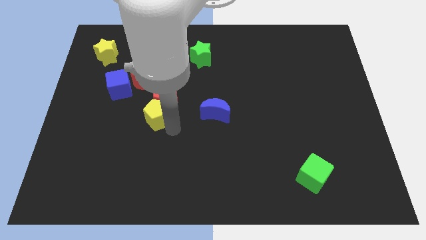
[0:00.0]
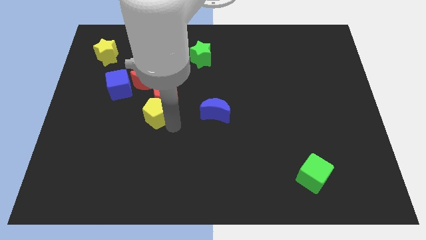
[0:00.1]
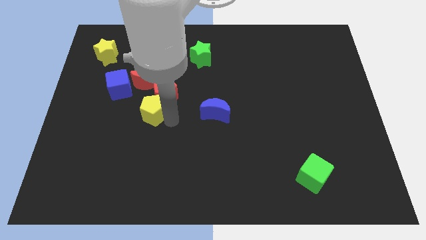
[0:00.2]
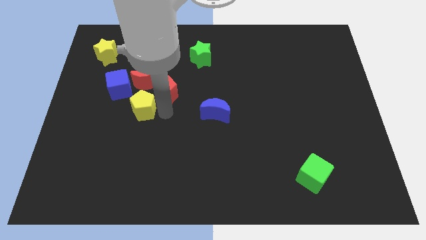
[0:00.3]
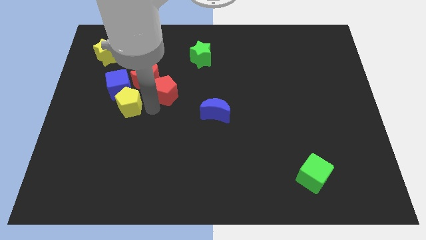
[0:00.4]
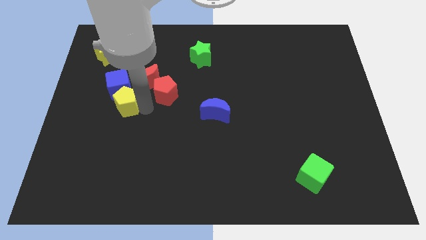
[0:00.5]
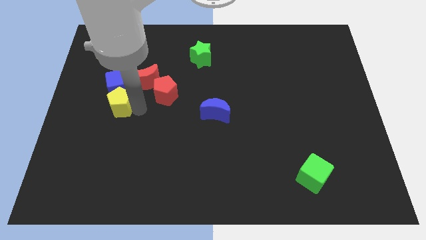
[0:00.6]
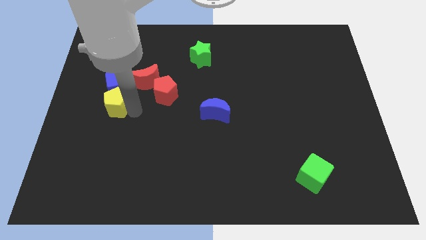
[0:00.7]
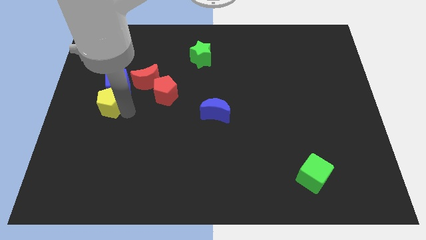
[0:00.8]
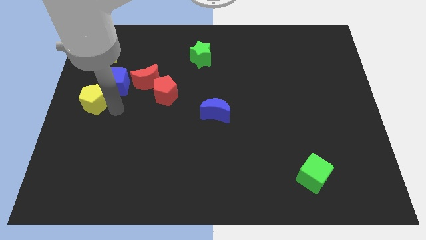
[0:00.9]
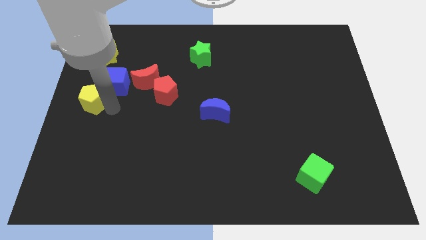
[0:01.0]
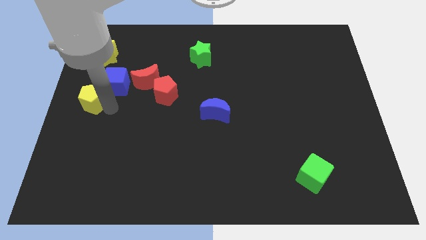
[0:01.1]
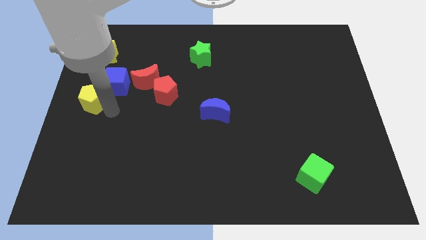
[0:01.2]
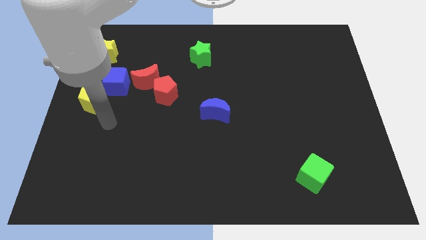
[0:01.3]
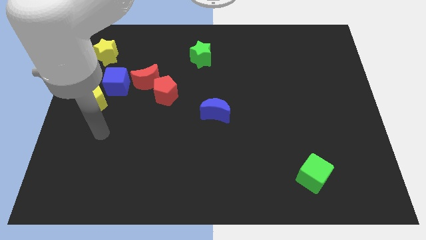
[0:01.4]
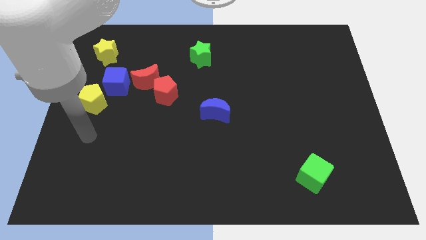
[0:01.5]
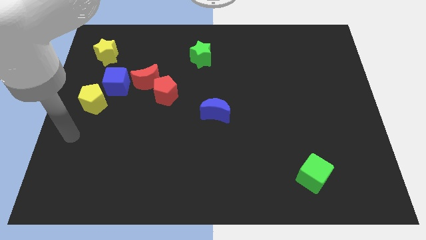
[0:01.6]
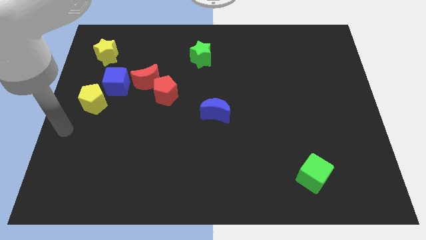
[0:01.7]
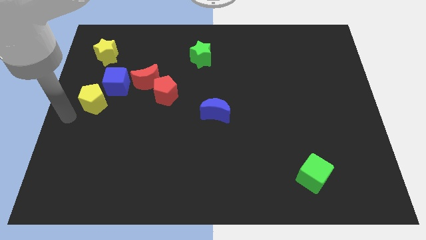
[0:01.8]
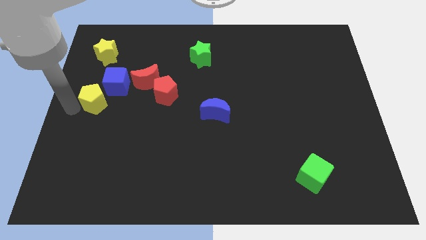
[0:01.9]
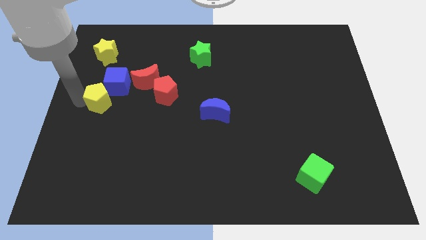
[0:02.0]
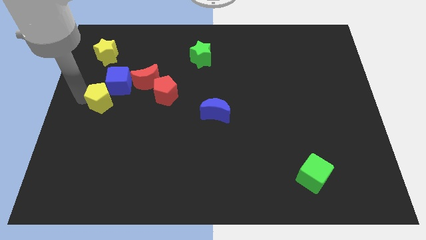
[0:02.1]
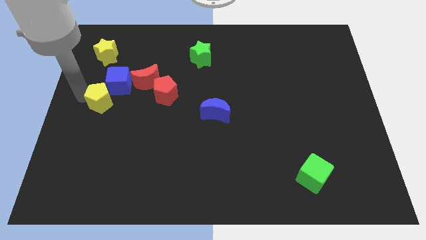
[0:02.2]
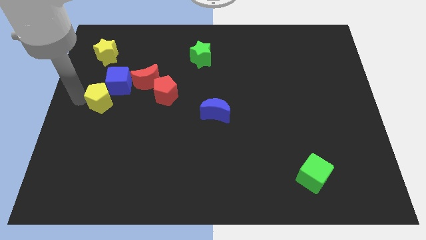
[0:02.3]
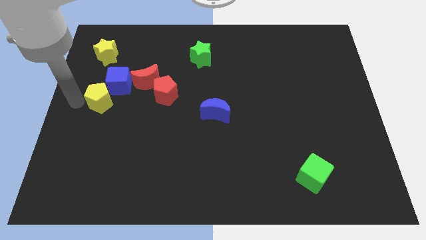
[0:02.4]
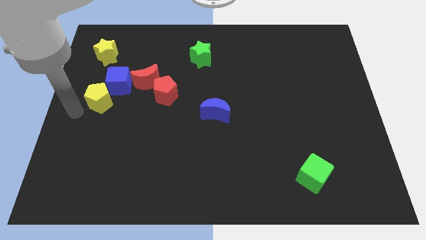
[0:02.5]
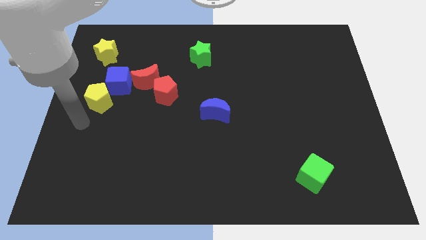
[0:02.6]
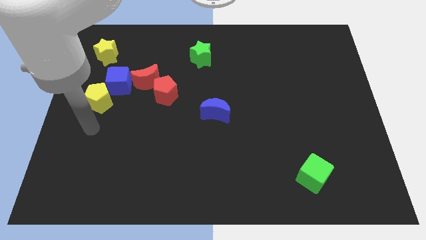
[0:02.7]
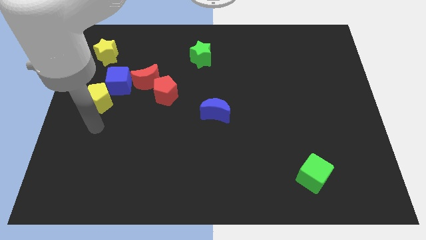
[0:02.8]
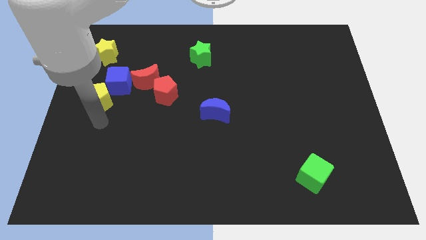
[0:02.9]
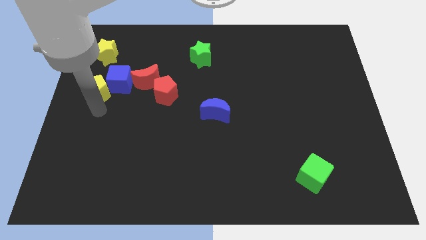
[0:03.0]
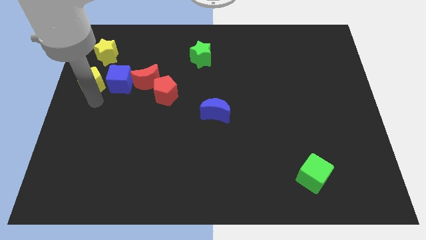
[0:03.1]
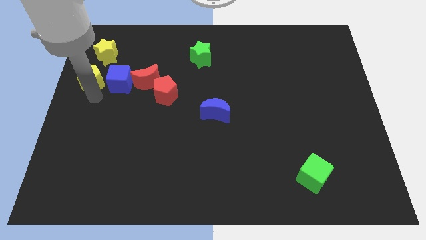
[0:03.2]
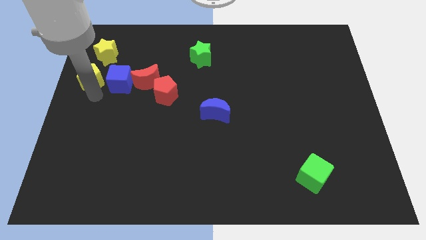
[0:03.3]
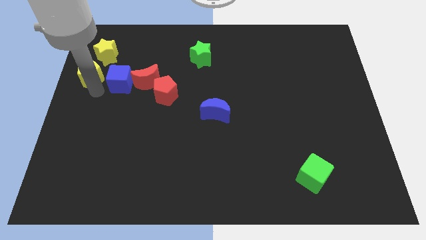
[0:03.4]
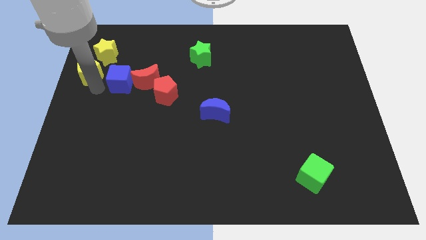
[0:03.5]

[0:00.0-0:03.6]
place the yellow pentagon to the left of the blue cube

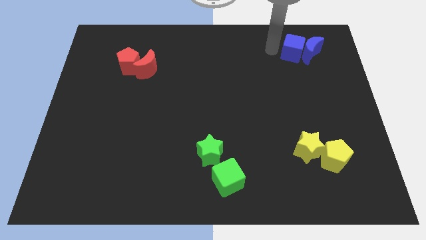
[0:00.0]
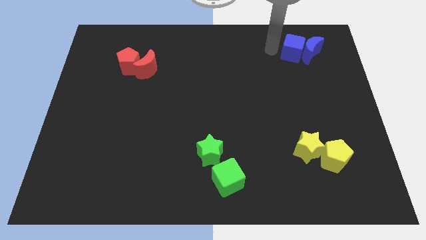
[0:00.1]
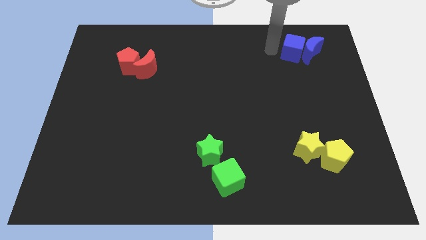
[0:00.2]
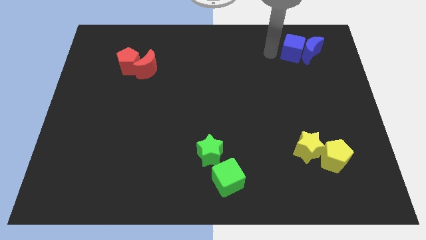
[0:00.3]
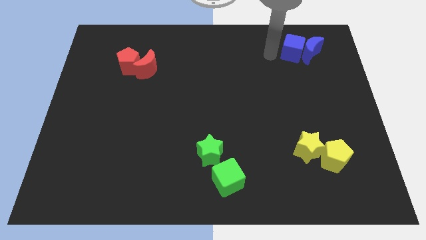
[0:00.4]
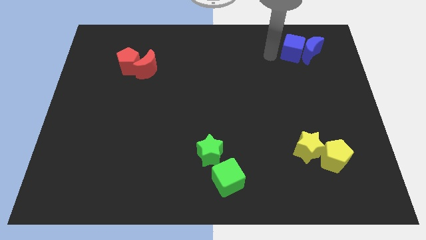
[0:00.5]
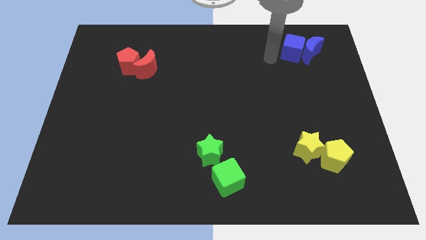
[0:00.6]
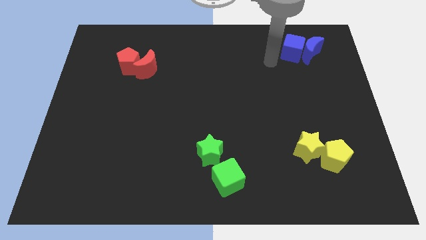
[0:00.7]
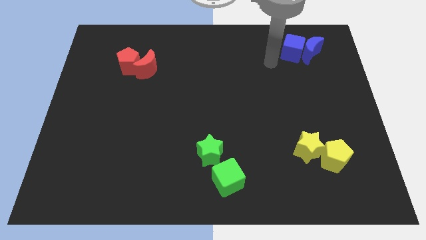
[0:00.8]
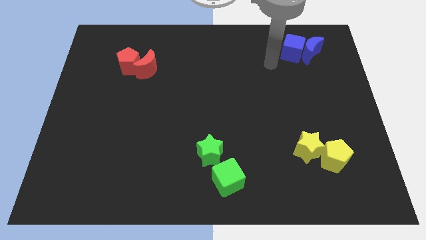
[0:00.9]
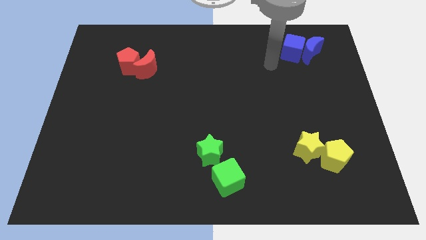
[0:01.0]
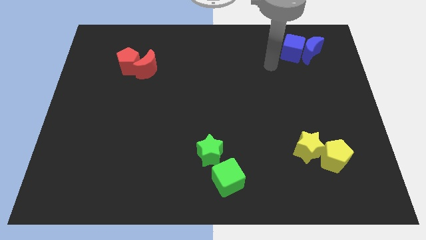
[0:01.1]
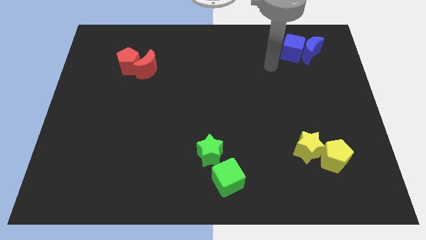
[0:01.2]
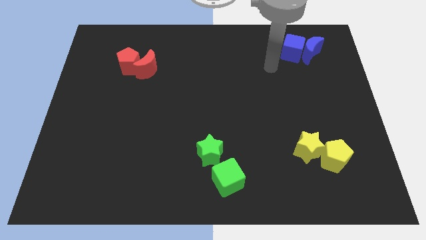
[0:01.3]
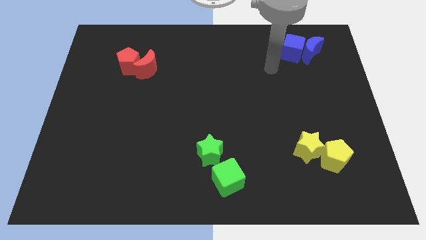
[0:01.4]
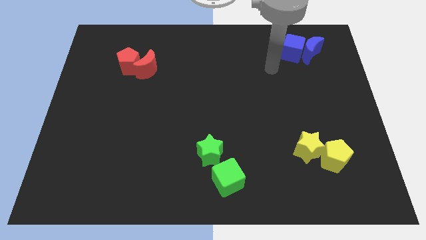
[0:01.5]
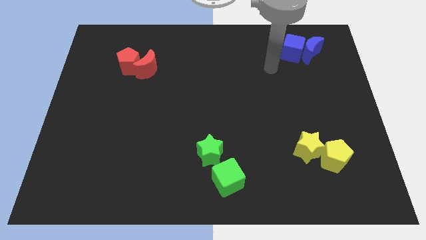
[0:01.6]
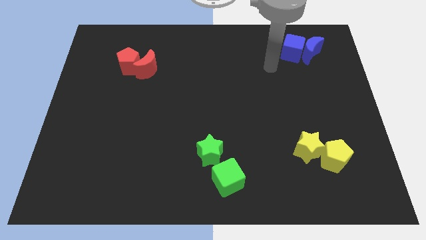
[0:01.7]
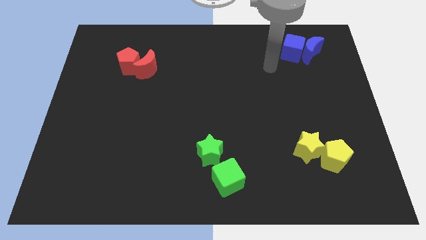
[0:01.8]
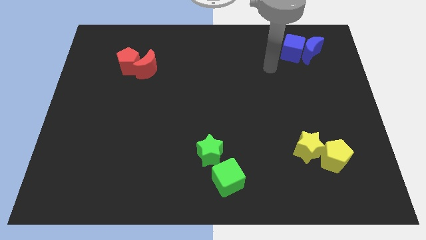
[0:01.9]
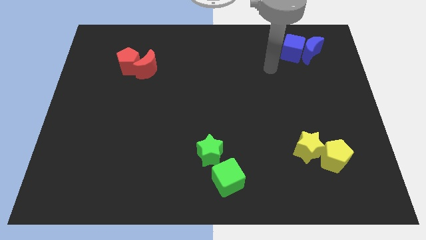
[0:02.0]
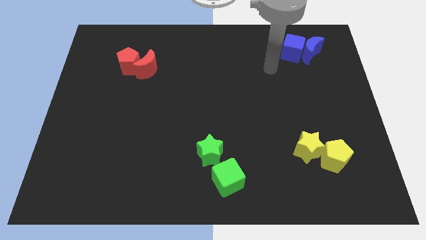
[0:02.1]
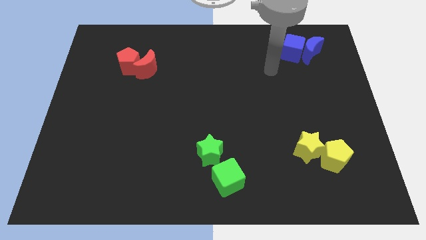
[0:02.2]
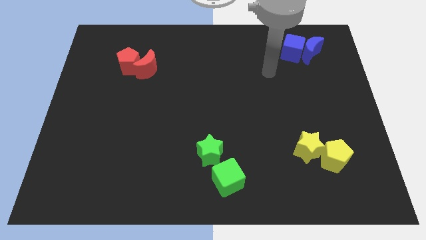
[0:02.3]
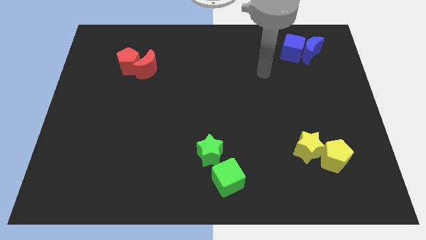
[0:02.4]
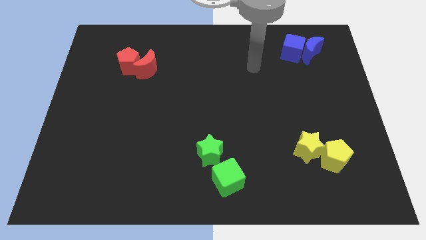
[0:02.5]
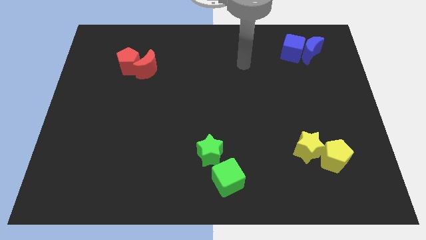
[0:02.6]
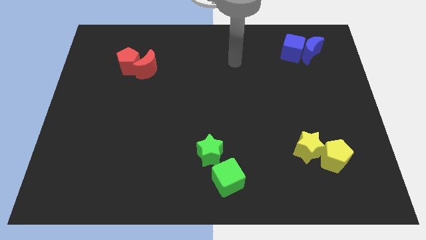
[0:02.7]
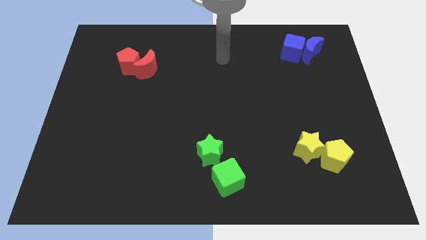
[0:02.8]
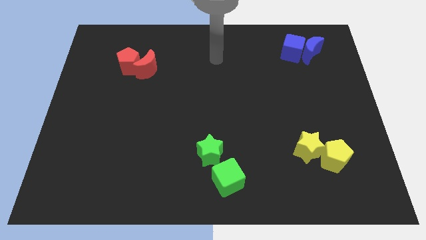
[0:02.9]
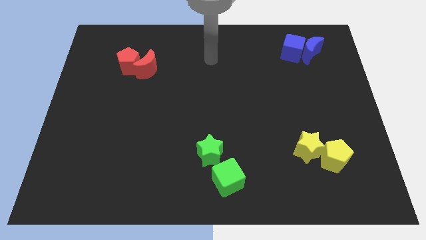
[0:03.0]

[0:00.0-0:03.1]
move the arm towards the top centre of the board

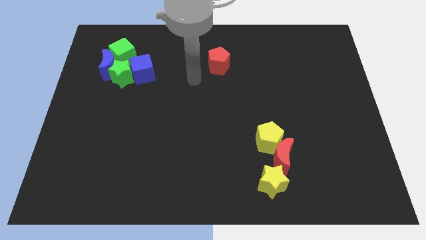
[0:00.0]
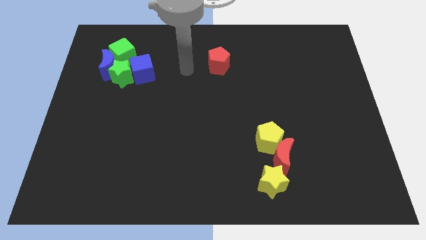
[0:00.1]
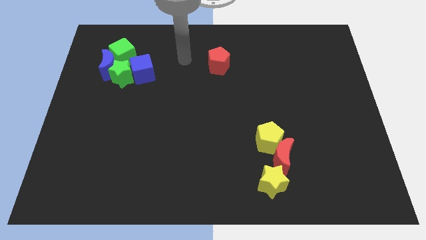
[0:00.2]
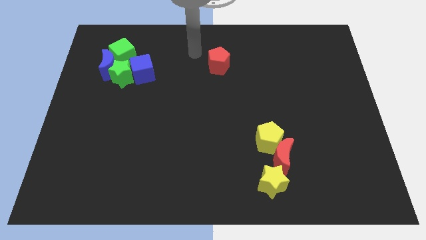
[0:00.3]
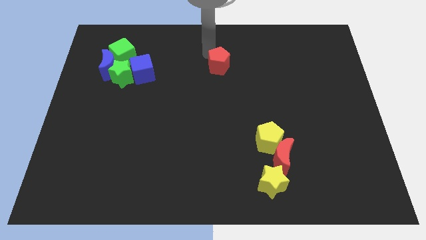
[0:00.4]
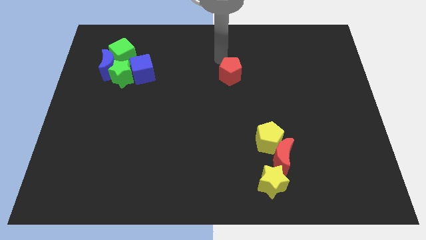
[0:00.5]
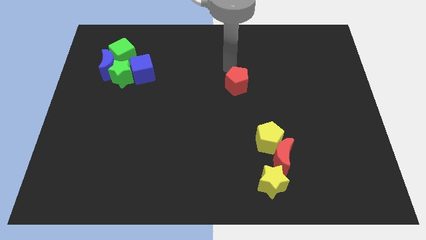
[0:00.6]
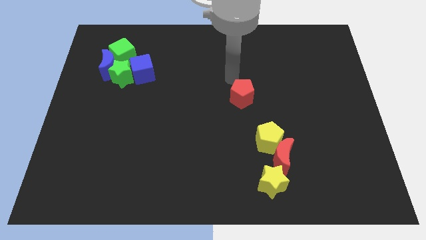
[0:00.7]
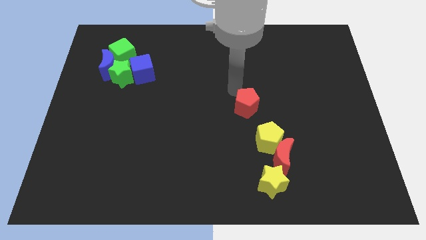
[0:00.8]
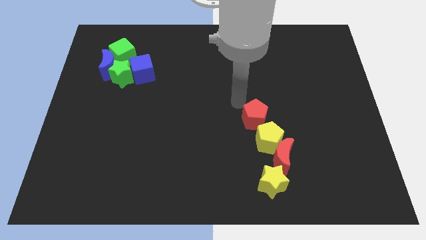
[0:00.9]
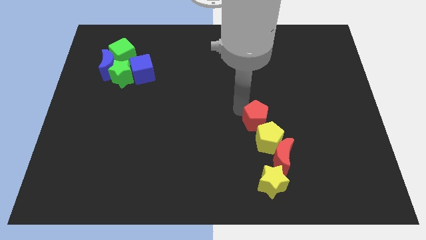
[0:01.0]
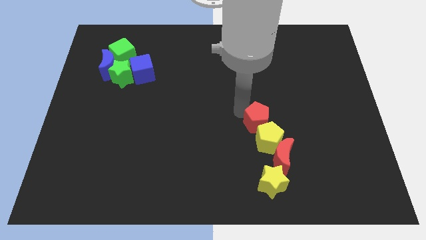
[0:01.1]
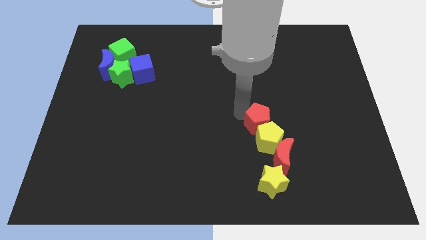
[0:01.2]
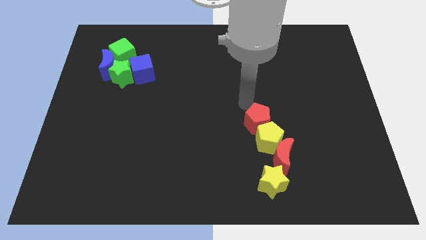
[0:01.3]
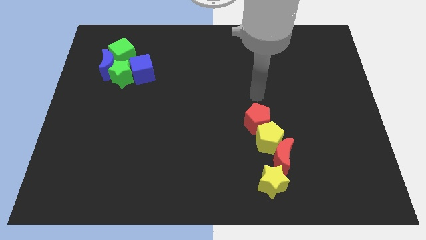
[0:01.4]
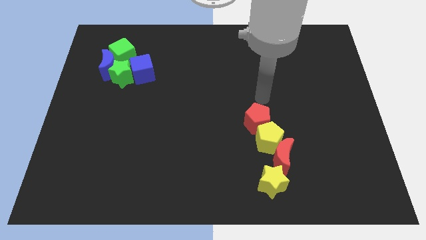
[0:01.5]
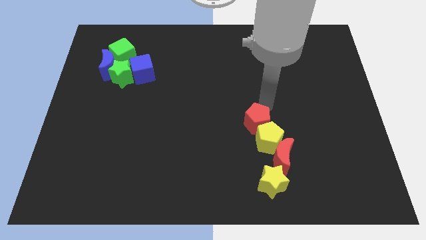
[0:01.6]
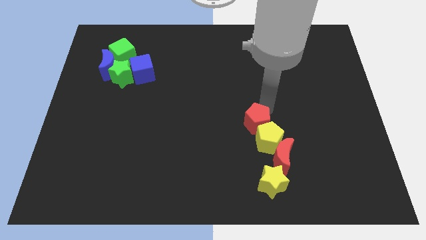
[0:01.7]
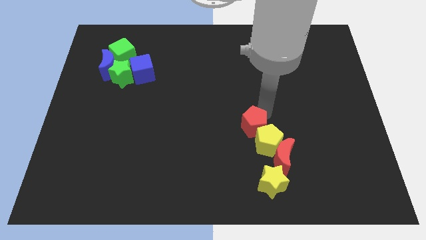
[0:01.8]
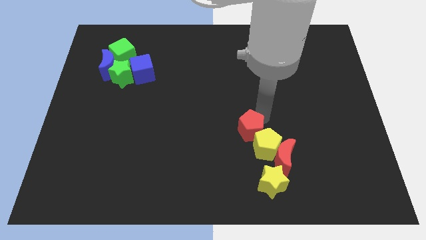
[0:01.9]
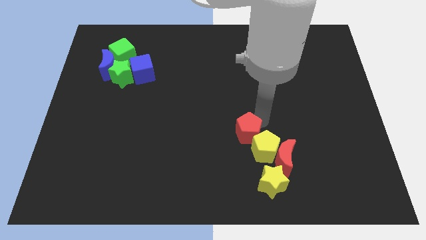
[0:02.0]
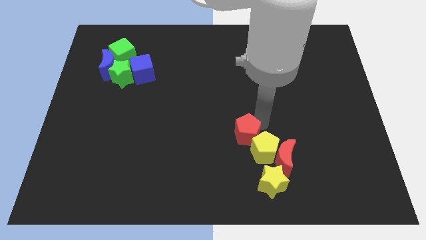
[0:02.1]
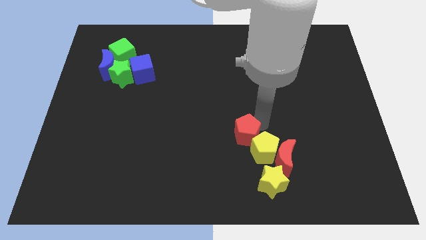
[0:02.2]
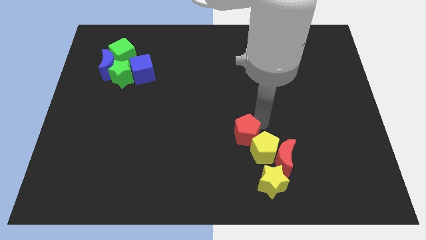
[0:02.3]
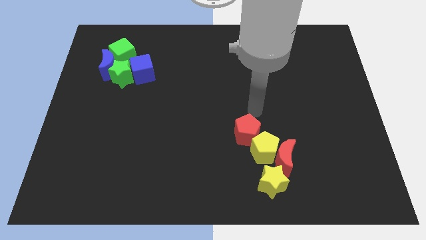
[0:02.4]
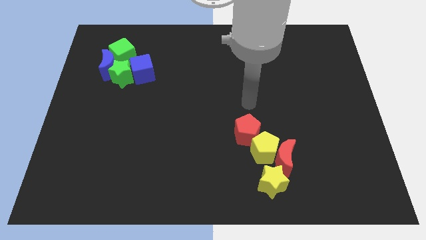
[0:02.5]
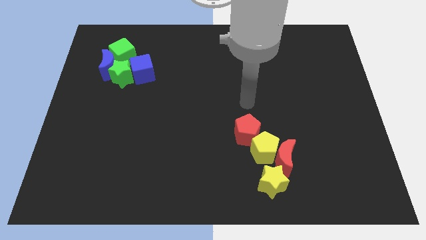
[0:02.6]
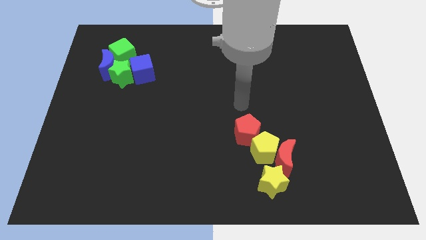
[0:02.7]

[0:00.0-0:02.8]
push the yellow pentagon towards the bottom right corner with the red pentagon
